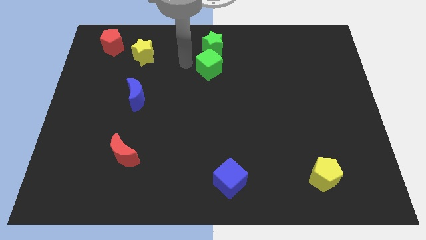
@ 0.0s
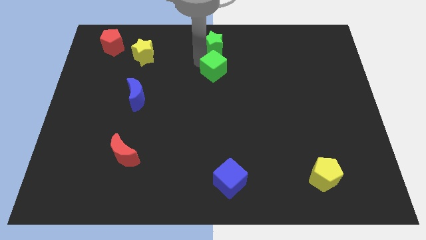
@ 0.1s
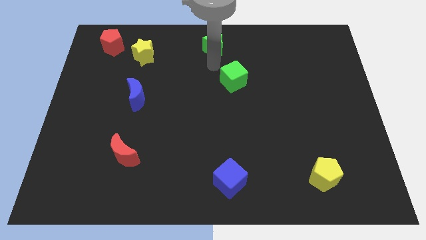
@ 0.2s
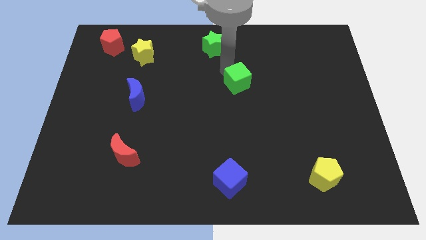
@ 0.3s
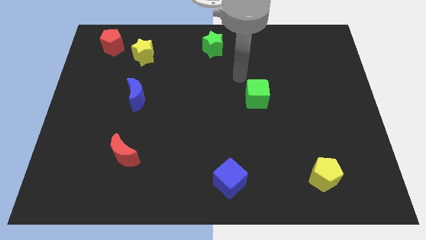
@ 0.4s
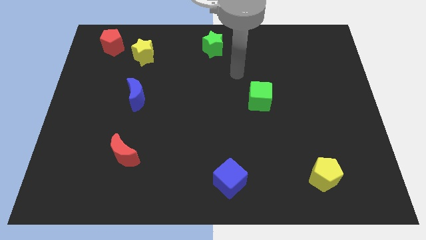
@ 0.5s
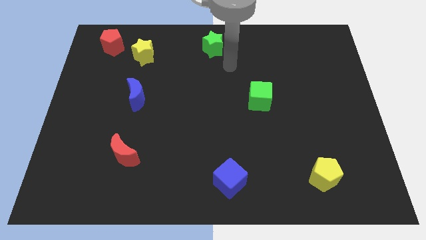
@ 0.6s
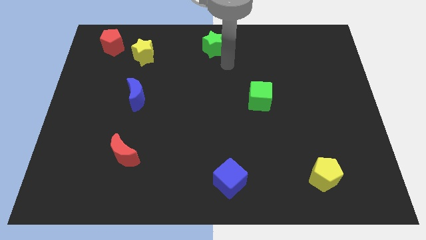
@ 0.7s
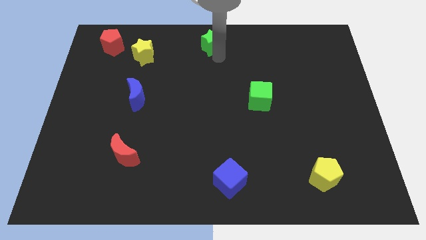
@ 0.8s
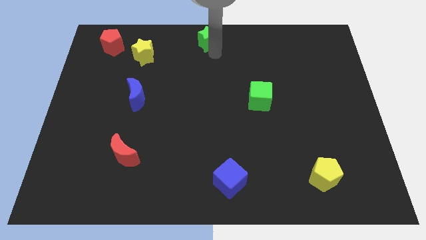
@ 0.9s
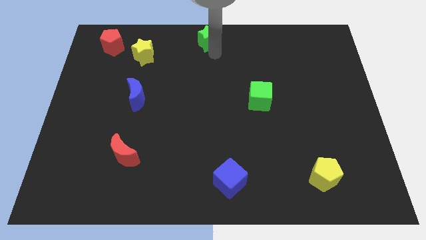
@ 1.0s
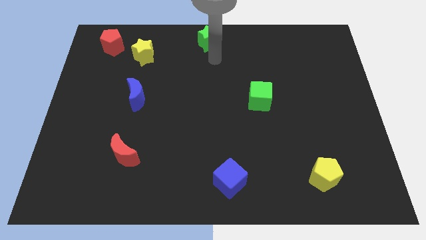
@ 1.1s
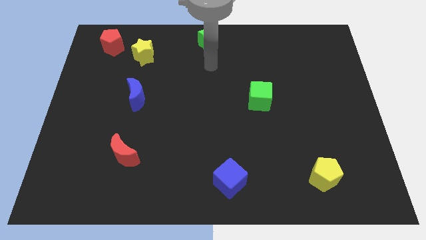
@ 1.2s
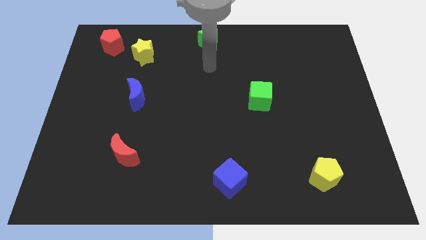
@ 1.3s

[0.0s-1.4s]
push the green cube away from the green star

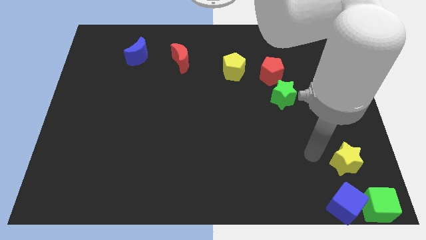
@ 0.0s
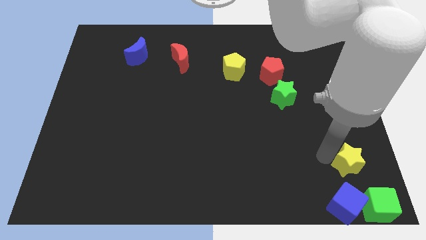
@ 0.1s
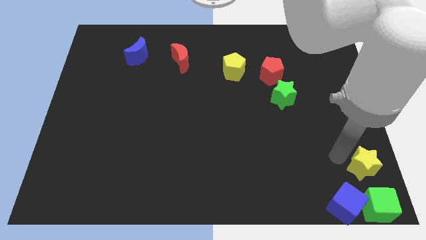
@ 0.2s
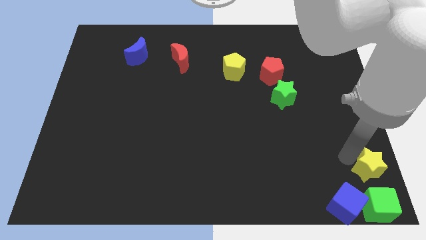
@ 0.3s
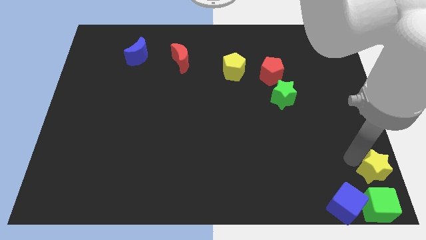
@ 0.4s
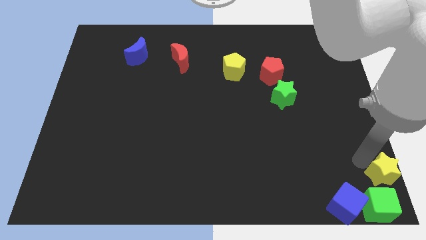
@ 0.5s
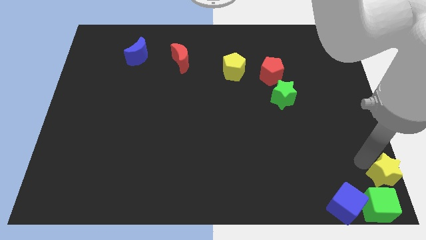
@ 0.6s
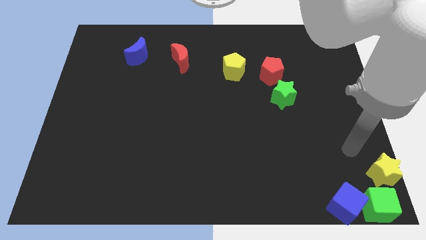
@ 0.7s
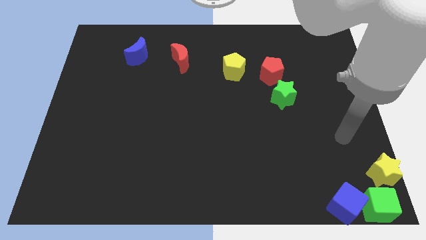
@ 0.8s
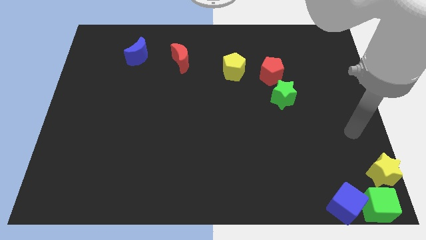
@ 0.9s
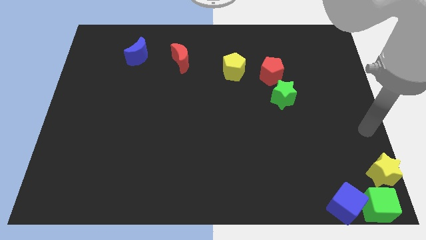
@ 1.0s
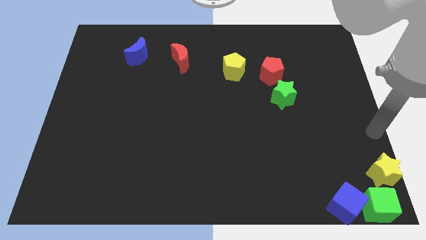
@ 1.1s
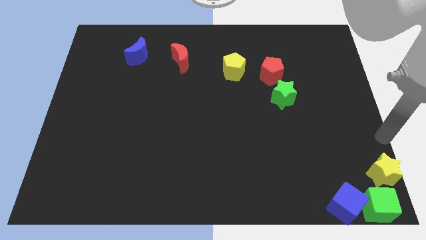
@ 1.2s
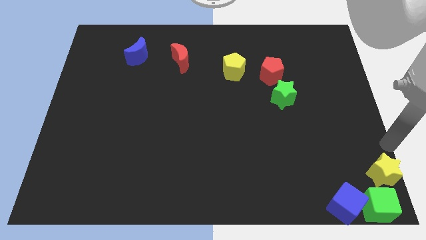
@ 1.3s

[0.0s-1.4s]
put the yellow star at the bottom right corner

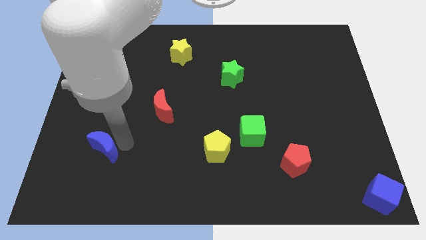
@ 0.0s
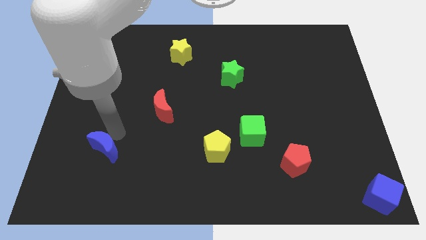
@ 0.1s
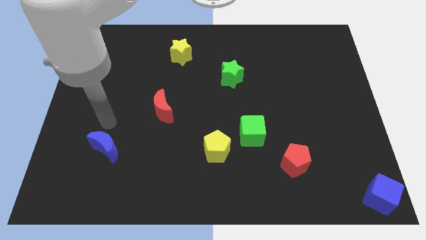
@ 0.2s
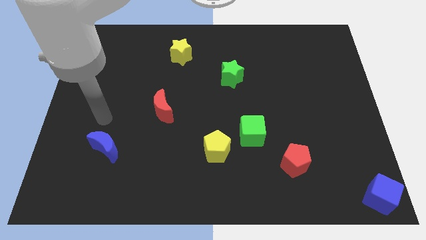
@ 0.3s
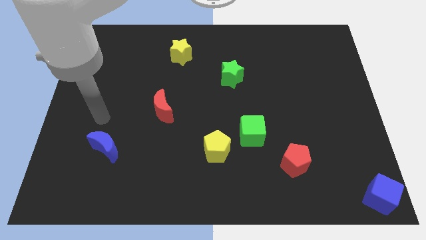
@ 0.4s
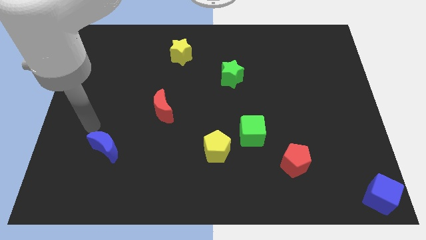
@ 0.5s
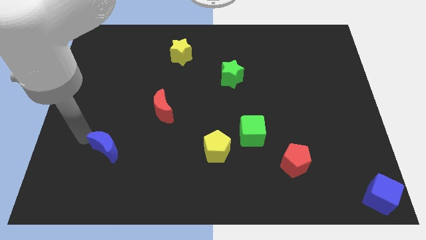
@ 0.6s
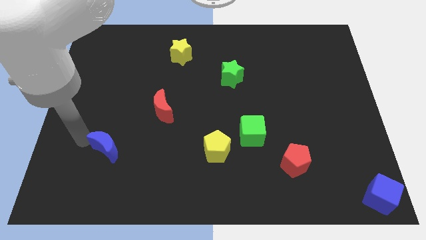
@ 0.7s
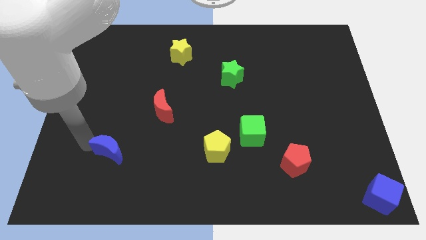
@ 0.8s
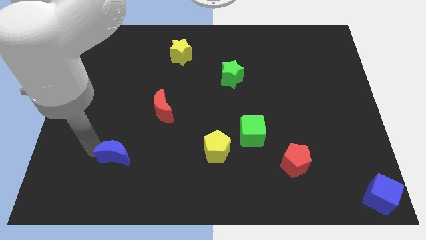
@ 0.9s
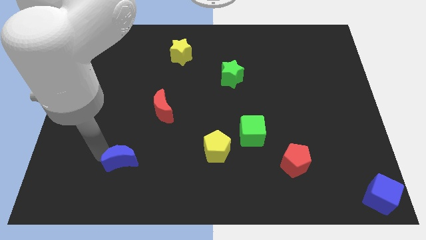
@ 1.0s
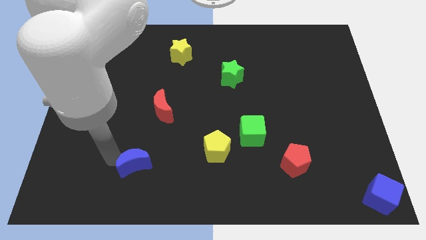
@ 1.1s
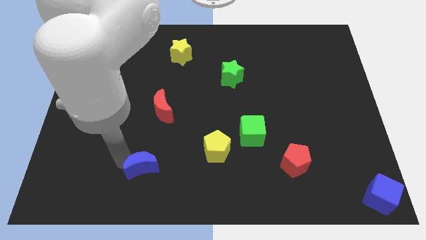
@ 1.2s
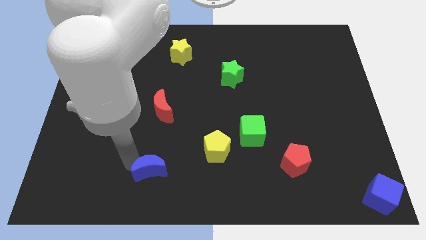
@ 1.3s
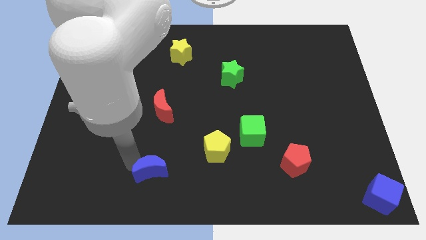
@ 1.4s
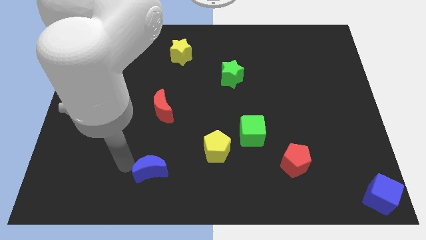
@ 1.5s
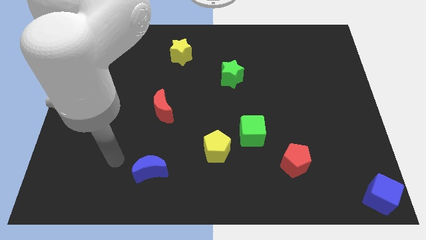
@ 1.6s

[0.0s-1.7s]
place the blue crescent vertically below the red crescent

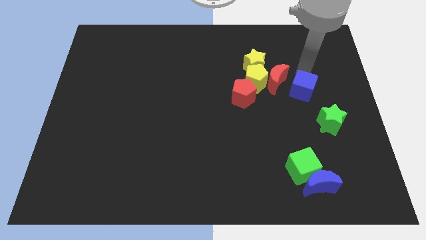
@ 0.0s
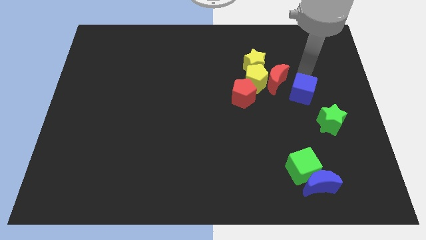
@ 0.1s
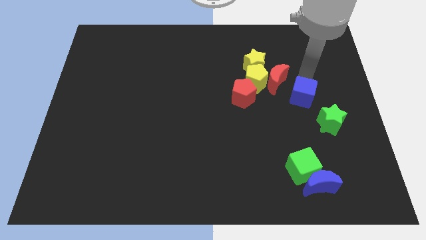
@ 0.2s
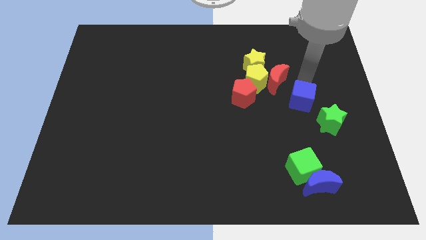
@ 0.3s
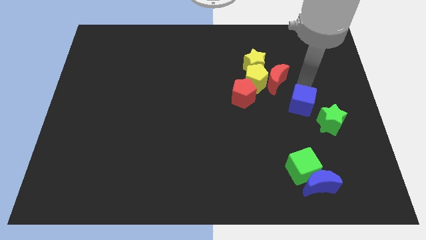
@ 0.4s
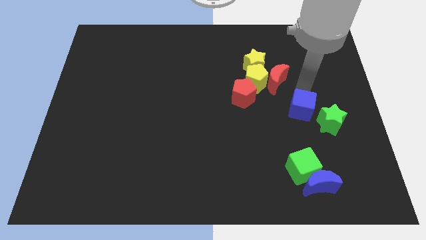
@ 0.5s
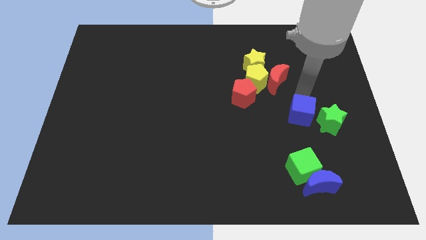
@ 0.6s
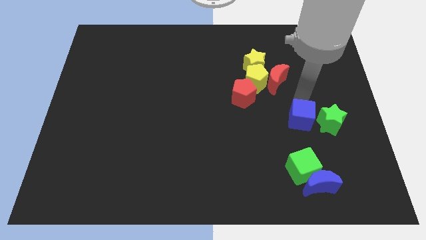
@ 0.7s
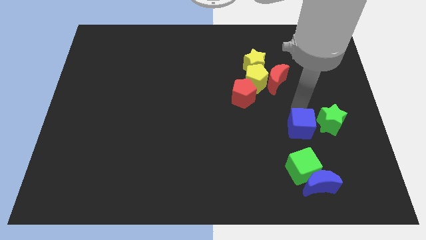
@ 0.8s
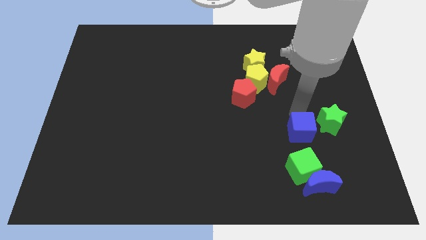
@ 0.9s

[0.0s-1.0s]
move the blue cube to the left of the green star

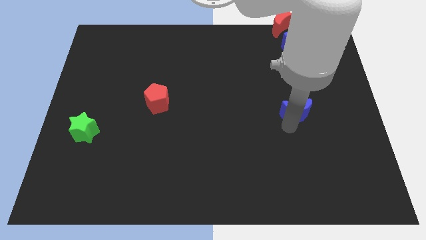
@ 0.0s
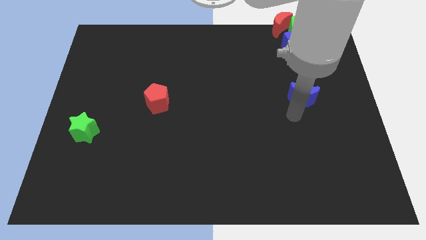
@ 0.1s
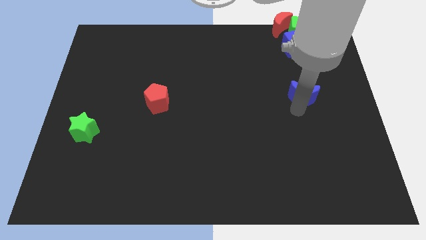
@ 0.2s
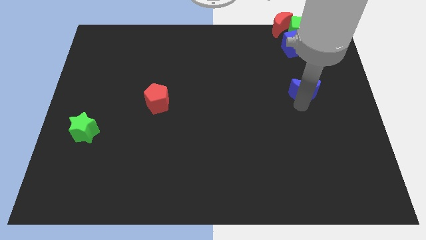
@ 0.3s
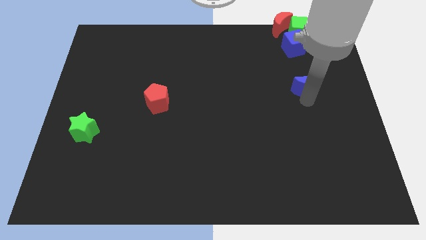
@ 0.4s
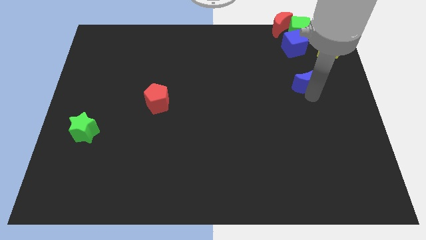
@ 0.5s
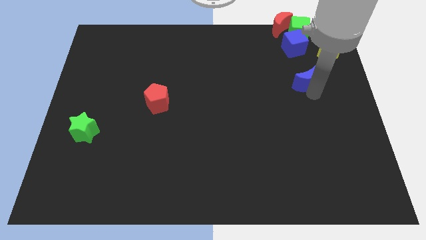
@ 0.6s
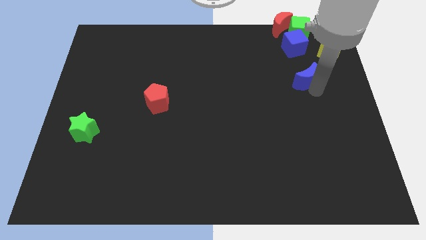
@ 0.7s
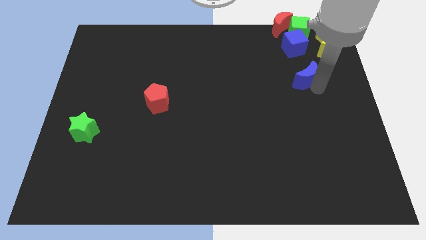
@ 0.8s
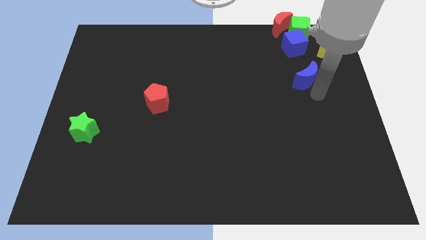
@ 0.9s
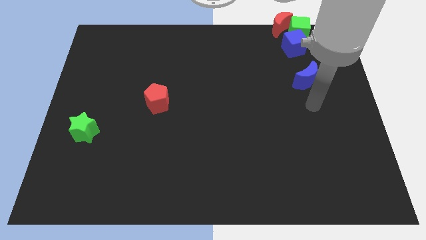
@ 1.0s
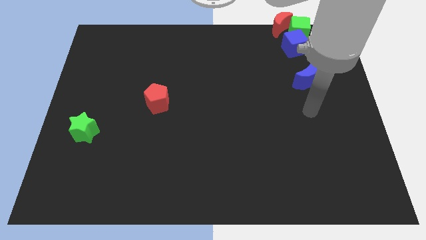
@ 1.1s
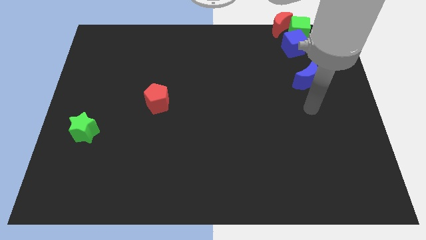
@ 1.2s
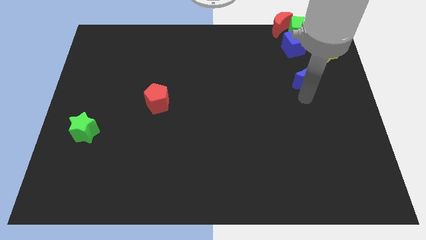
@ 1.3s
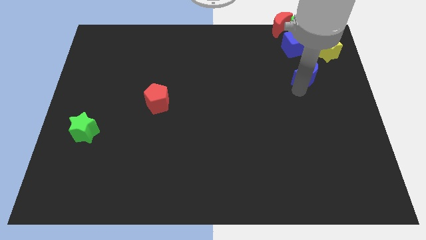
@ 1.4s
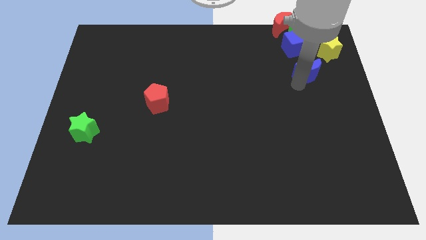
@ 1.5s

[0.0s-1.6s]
push the blue crescent to the top right of the board

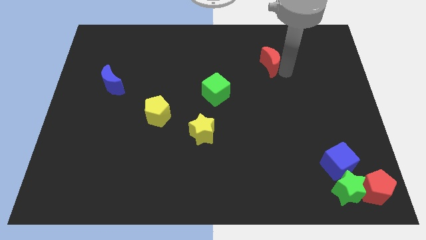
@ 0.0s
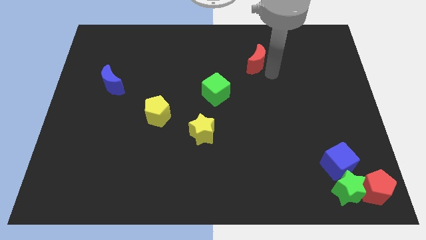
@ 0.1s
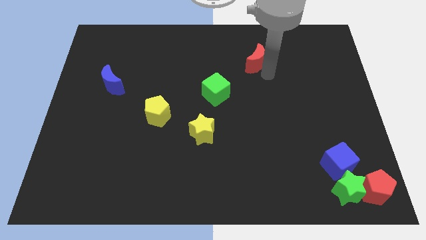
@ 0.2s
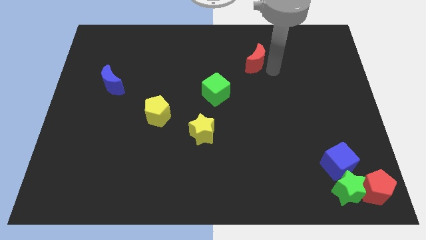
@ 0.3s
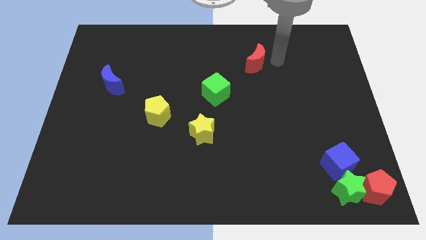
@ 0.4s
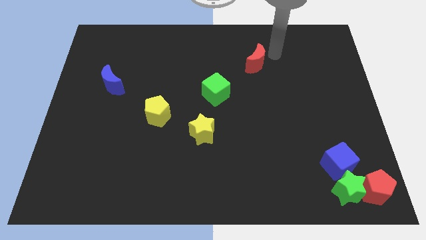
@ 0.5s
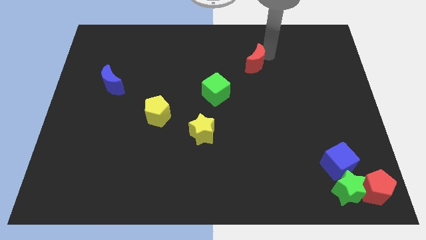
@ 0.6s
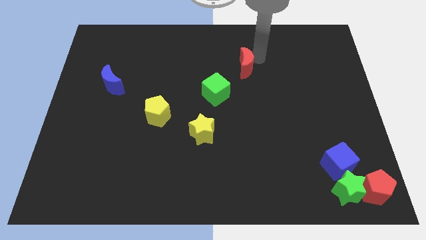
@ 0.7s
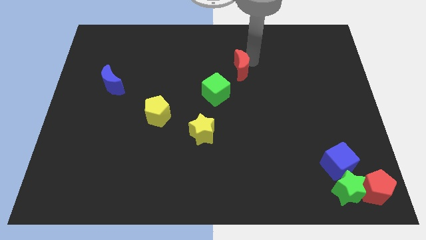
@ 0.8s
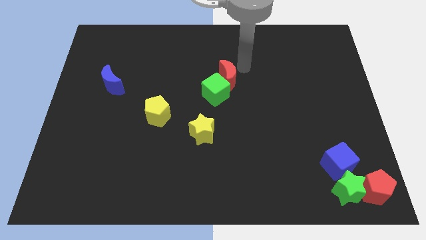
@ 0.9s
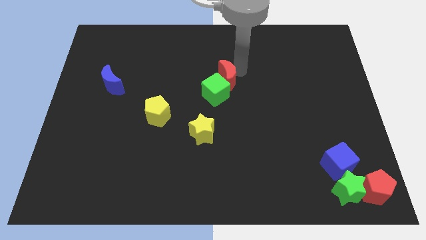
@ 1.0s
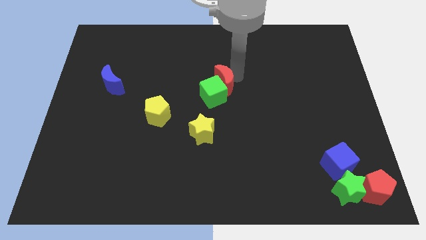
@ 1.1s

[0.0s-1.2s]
push the red crescent close to the green cube

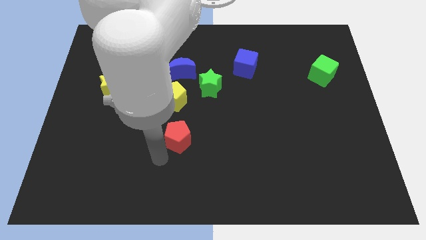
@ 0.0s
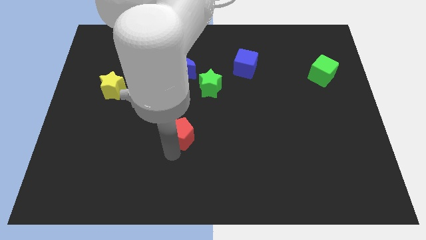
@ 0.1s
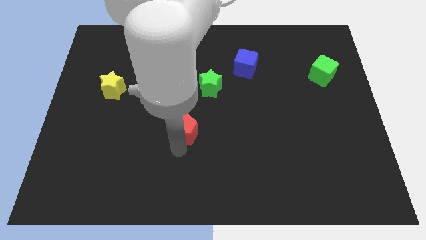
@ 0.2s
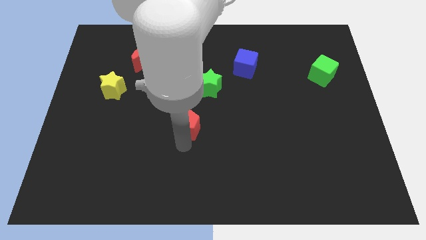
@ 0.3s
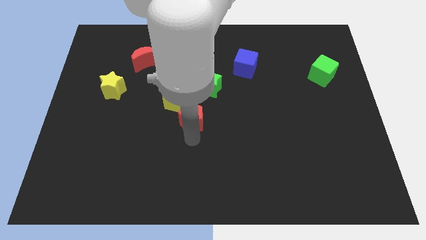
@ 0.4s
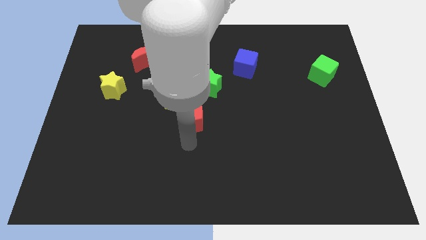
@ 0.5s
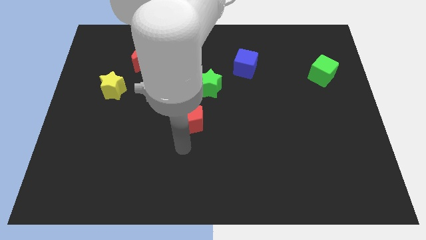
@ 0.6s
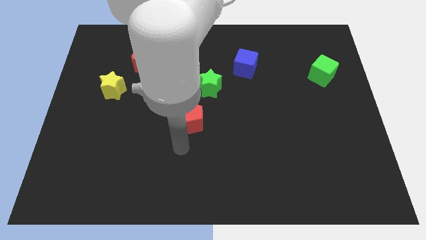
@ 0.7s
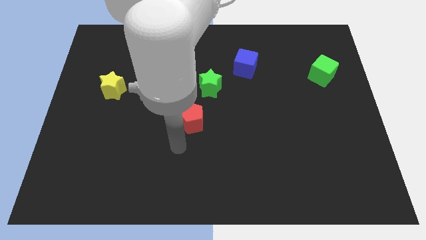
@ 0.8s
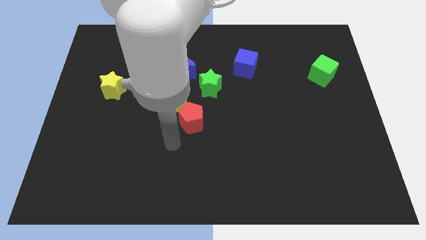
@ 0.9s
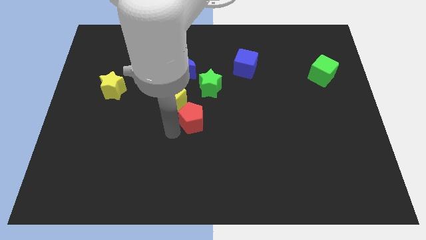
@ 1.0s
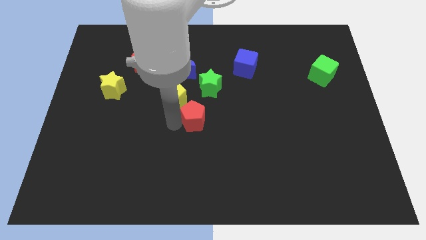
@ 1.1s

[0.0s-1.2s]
push red pentagon close to yellow pentagon
